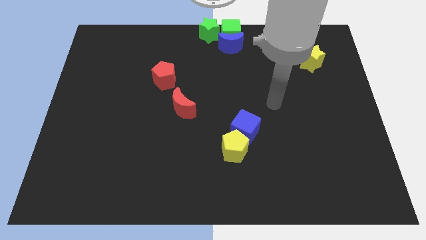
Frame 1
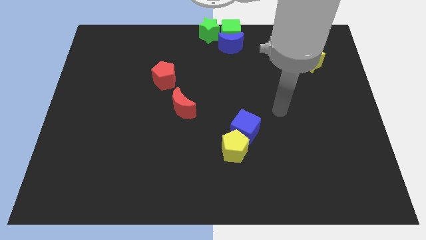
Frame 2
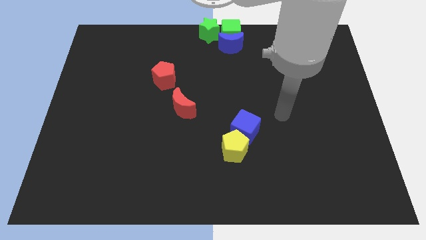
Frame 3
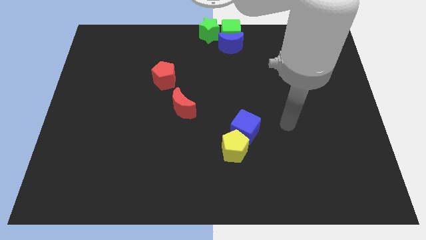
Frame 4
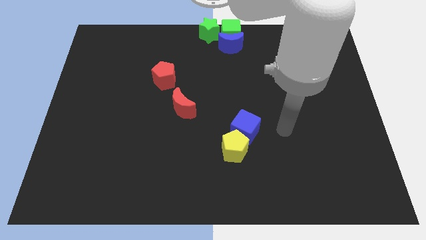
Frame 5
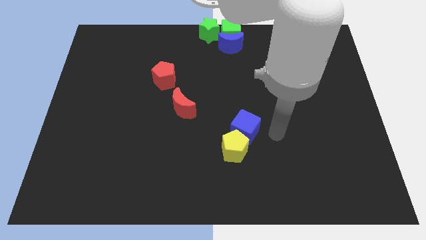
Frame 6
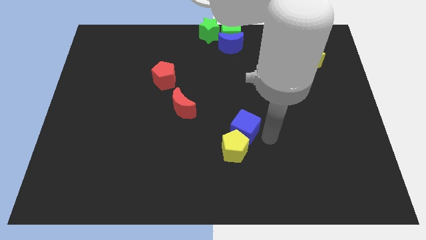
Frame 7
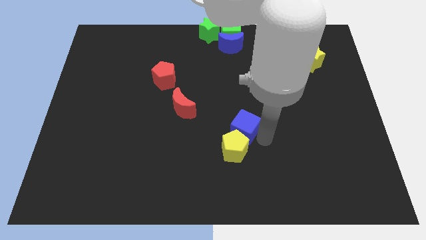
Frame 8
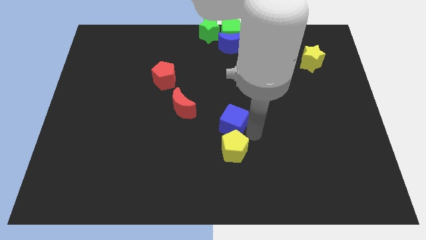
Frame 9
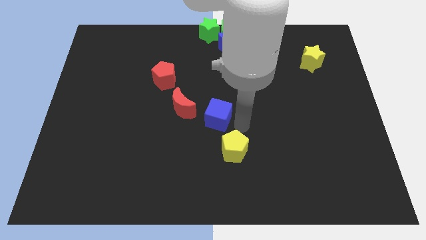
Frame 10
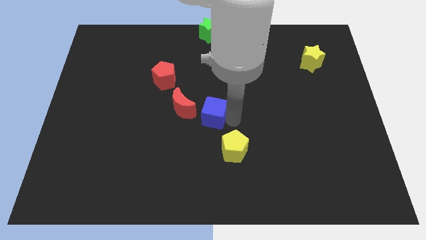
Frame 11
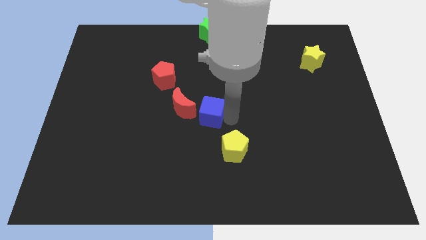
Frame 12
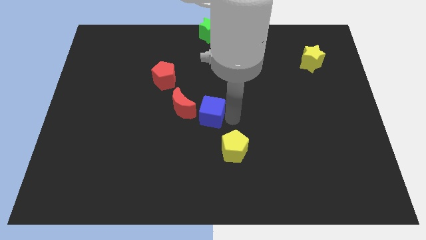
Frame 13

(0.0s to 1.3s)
move the blue cube to the center of the board

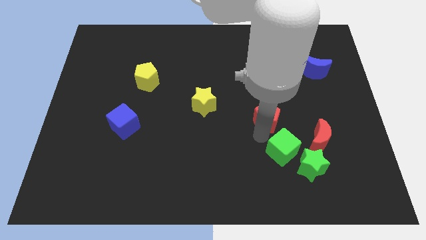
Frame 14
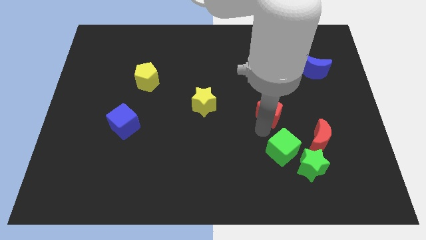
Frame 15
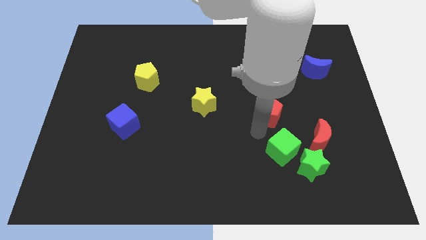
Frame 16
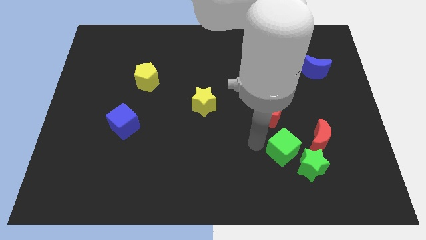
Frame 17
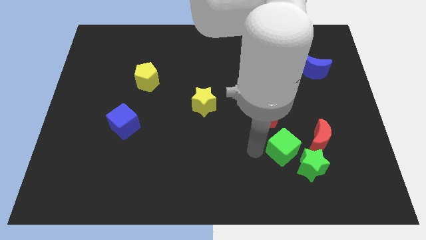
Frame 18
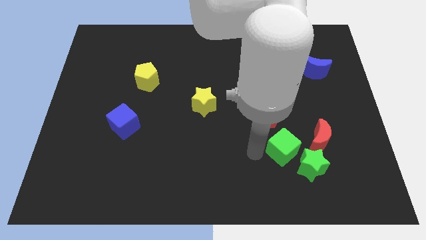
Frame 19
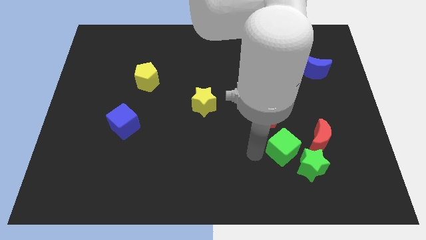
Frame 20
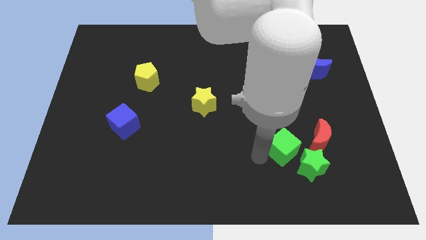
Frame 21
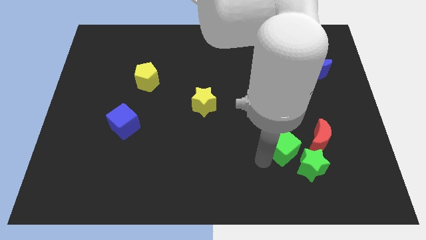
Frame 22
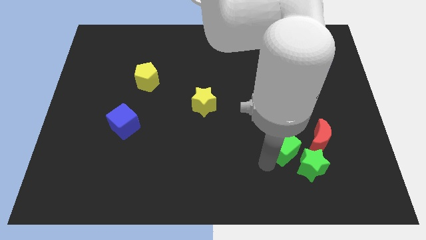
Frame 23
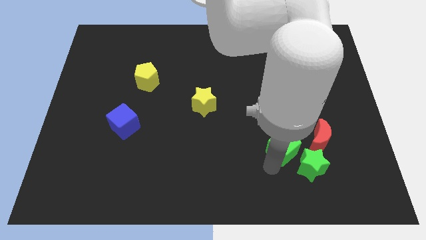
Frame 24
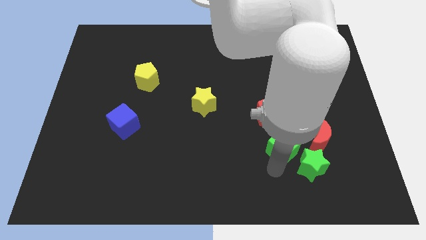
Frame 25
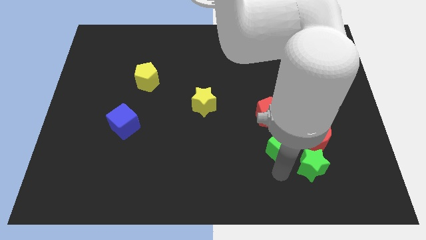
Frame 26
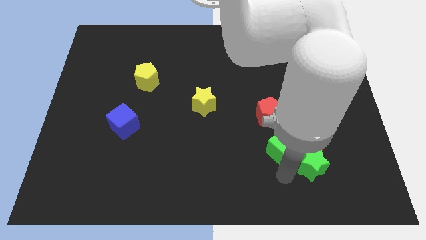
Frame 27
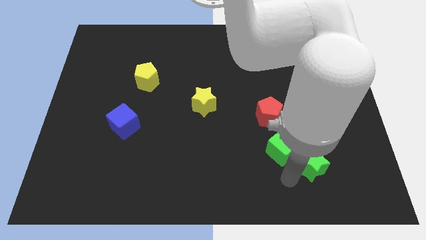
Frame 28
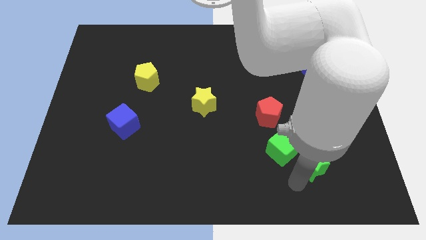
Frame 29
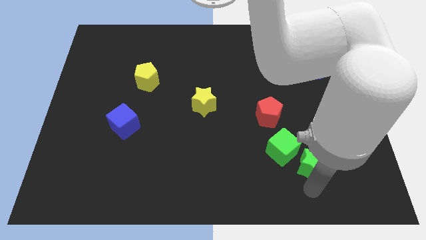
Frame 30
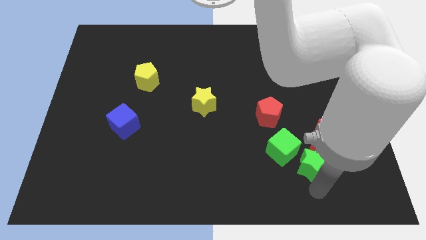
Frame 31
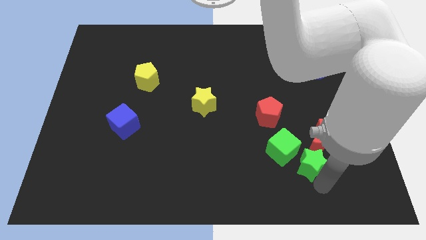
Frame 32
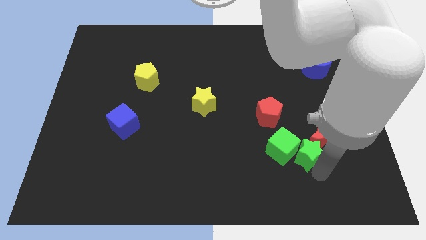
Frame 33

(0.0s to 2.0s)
slightly move the green star towards top

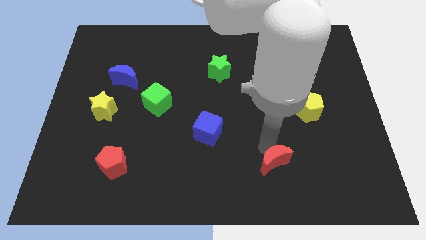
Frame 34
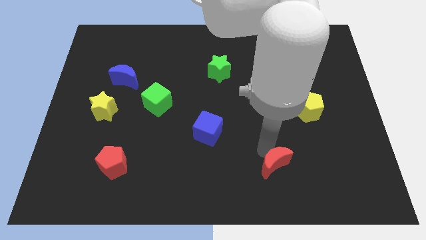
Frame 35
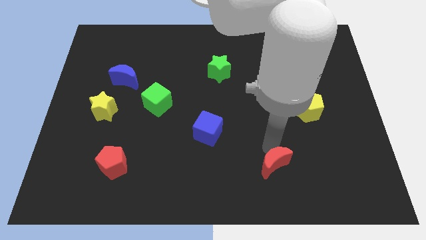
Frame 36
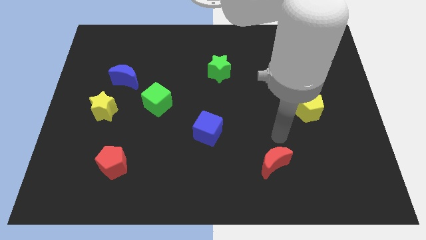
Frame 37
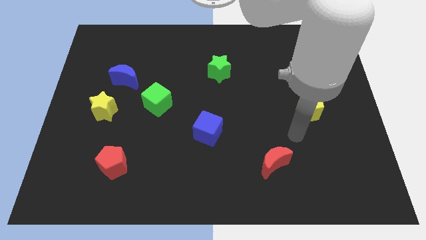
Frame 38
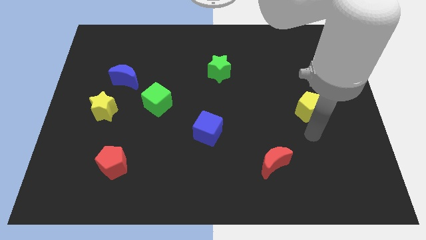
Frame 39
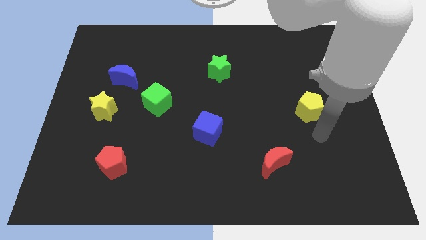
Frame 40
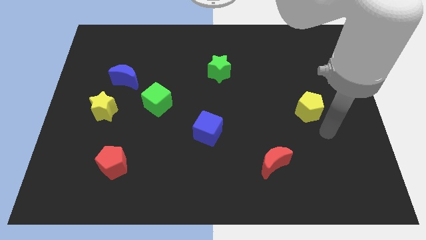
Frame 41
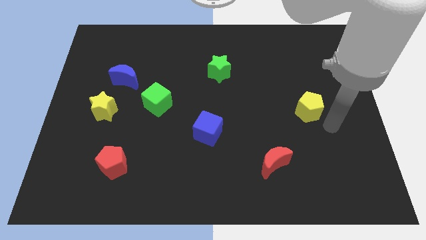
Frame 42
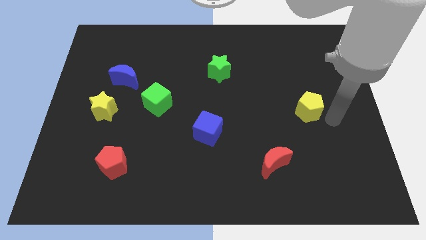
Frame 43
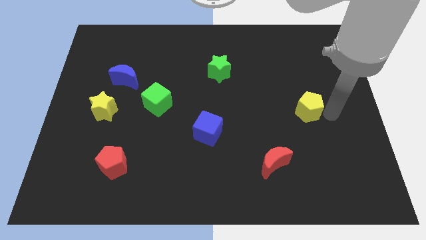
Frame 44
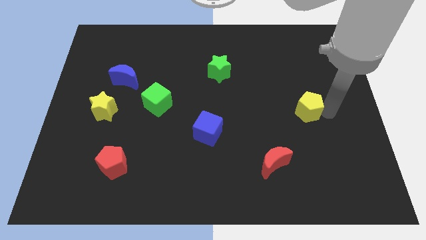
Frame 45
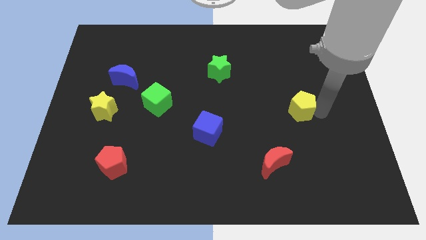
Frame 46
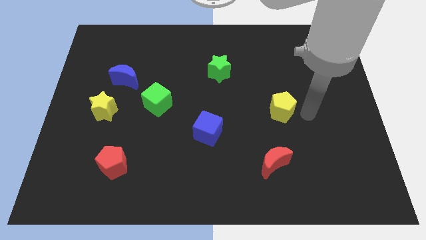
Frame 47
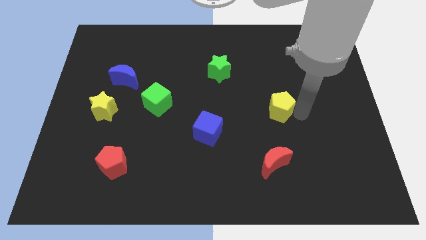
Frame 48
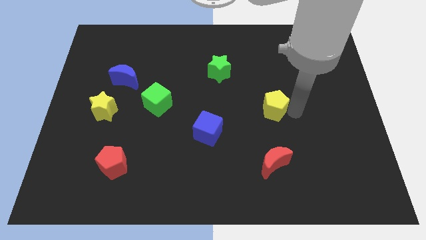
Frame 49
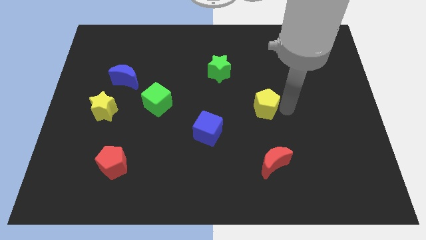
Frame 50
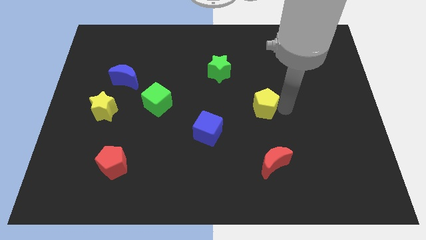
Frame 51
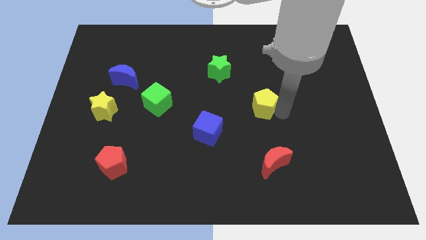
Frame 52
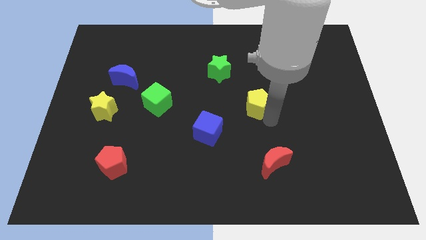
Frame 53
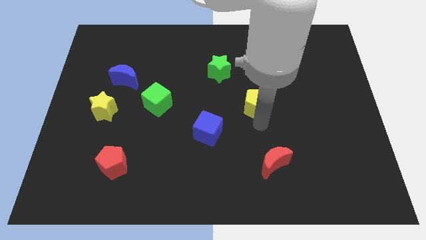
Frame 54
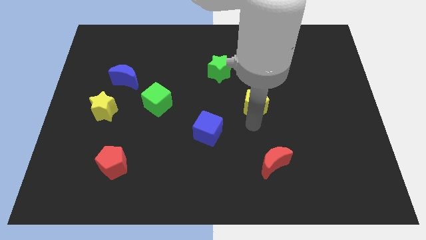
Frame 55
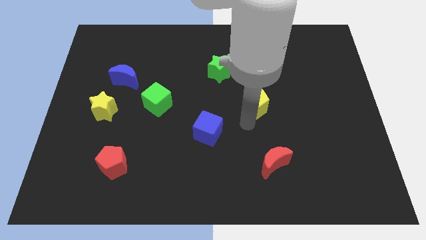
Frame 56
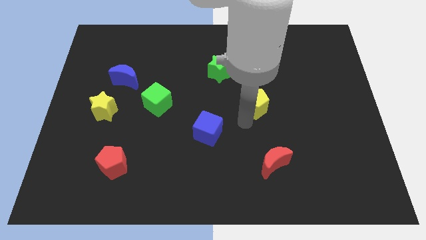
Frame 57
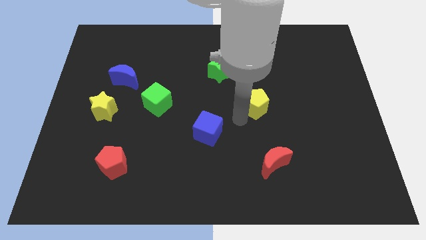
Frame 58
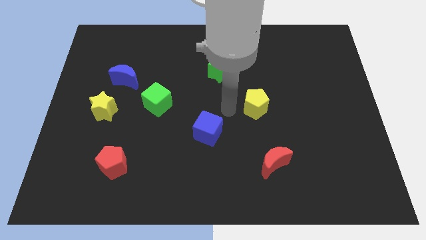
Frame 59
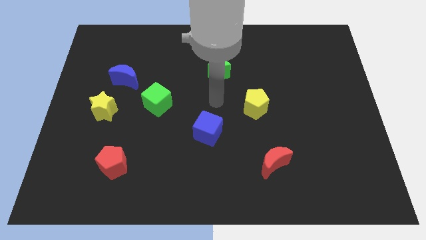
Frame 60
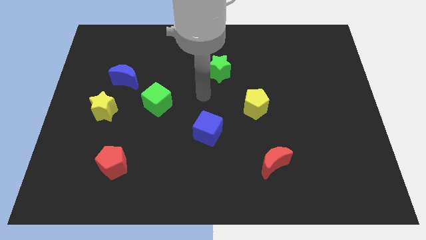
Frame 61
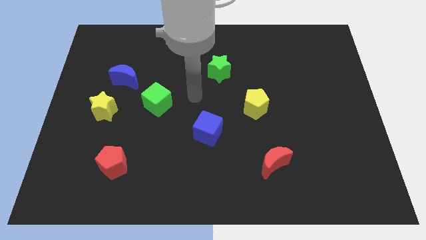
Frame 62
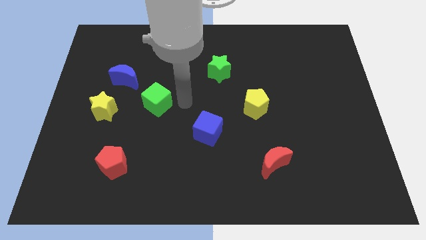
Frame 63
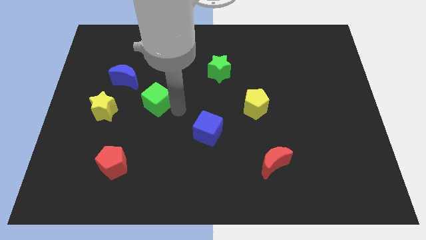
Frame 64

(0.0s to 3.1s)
place the yellow pentagon diagonal to the blue cube

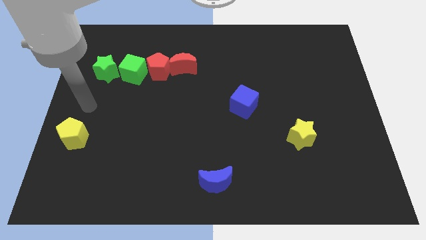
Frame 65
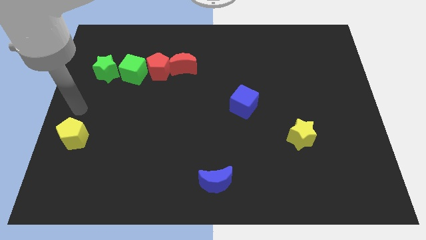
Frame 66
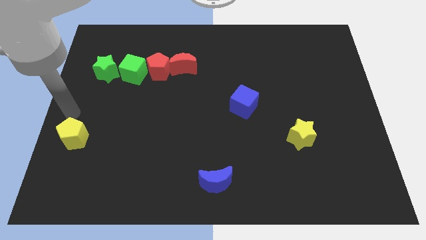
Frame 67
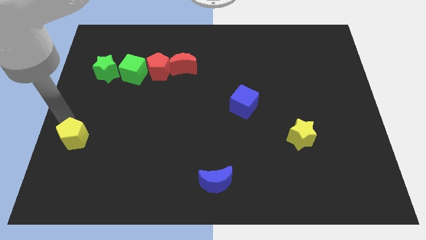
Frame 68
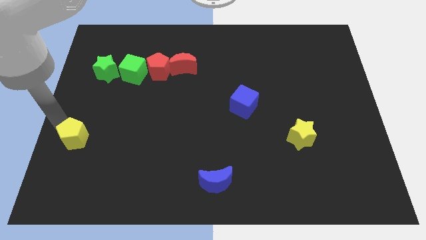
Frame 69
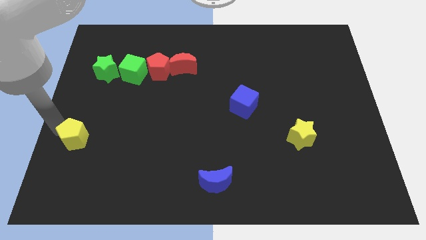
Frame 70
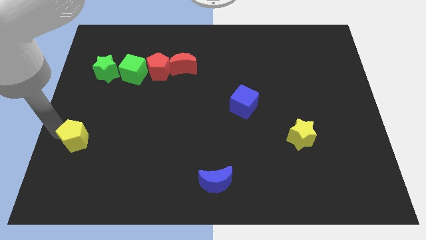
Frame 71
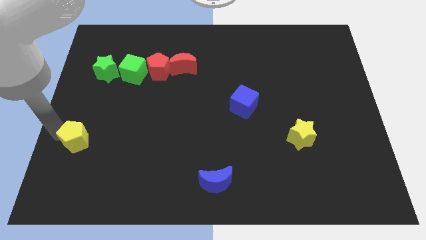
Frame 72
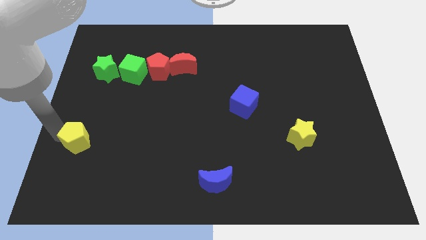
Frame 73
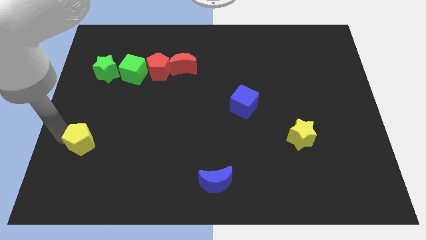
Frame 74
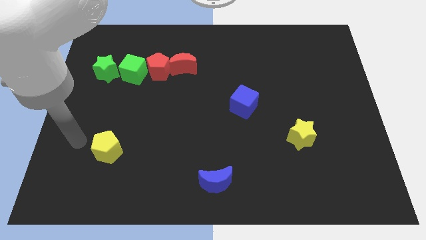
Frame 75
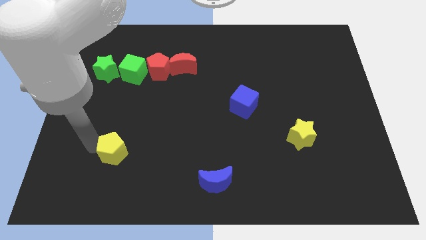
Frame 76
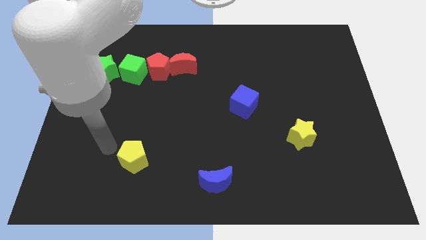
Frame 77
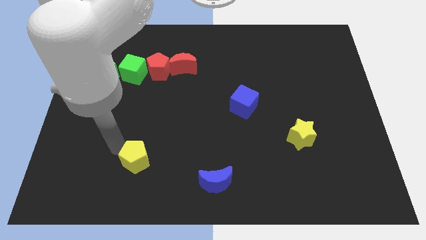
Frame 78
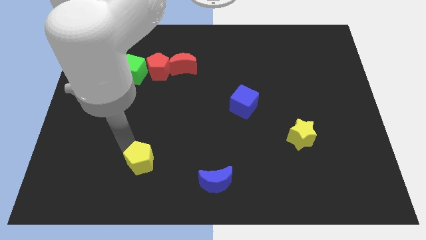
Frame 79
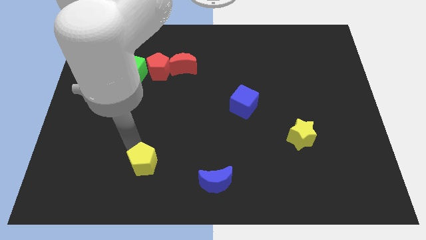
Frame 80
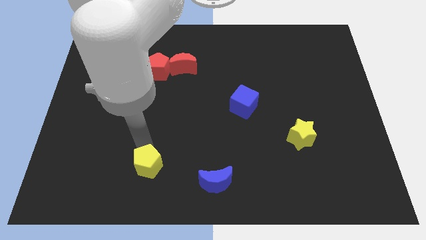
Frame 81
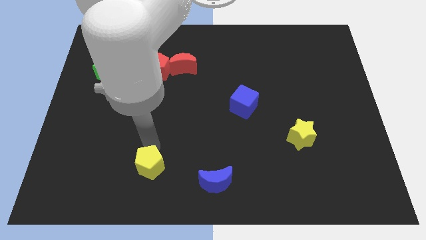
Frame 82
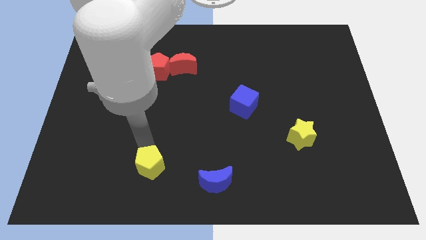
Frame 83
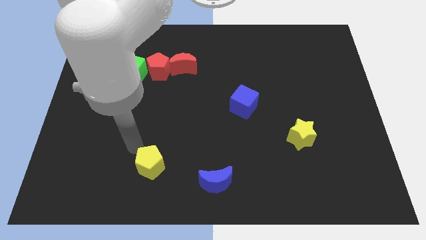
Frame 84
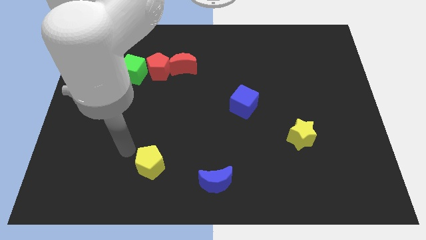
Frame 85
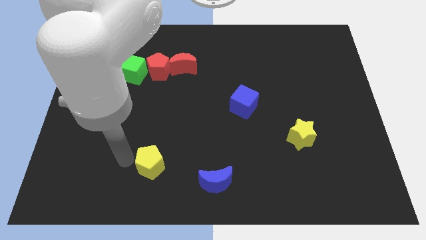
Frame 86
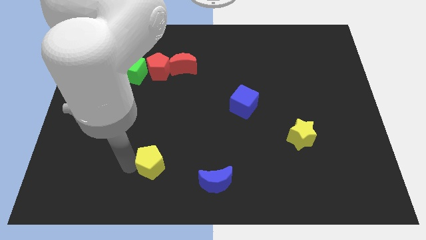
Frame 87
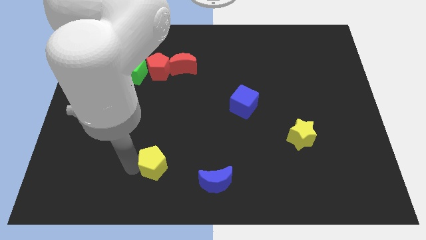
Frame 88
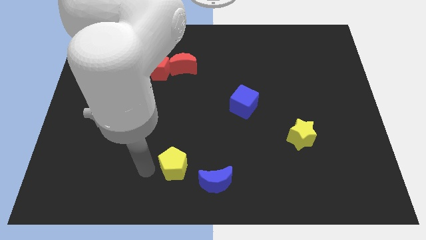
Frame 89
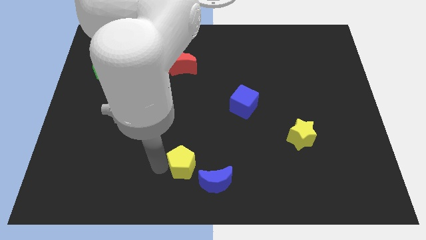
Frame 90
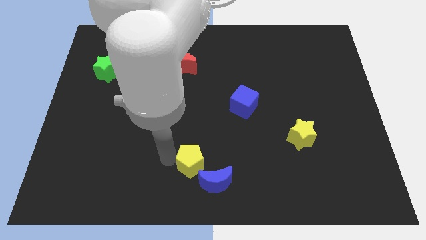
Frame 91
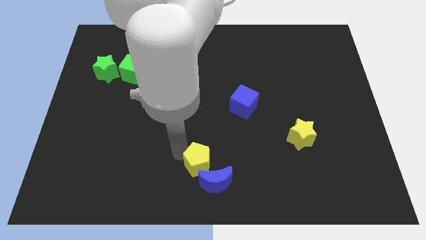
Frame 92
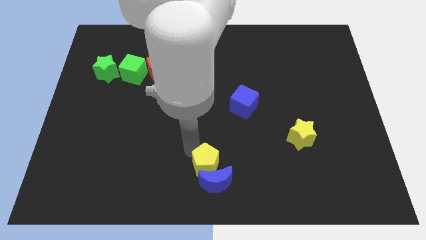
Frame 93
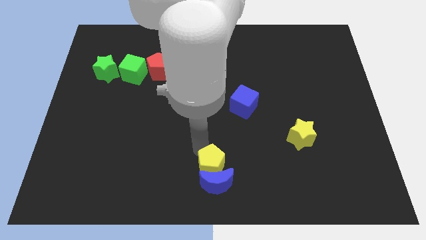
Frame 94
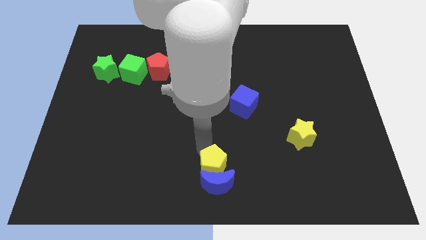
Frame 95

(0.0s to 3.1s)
push the yellow pentagon into the blue moon
